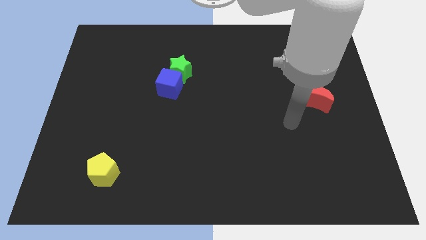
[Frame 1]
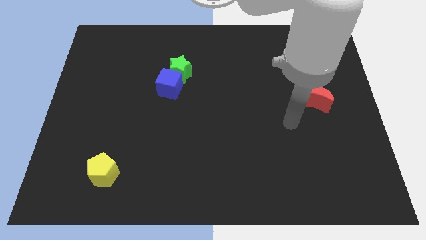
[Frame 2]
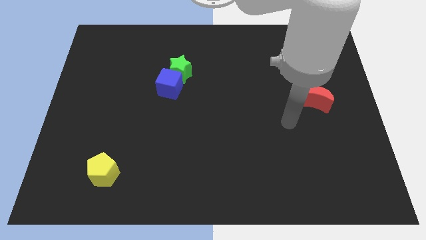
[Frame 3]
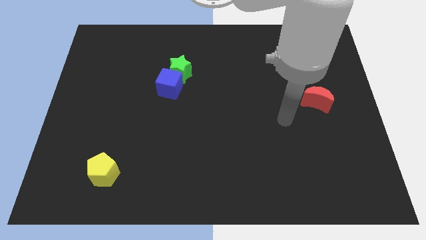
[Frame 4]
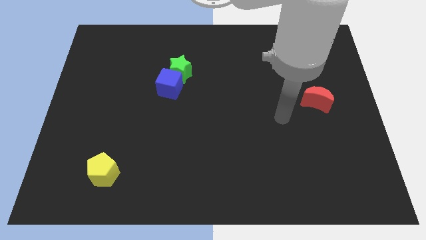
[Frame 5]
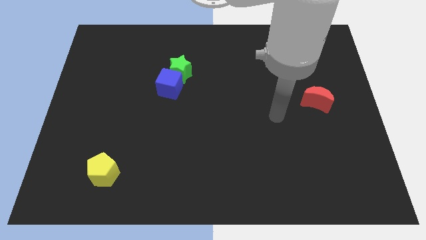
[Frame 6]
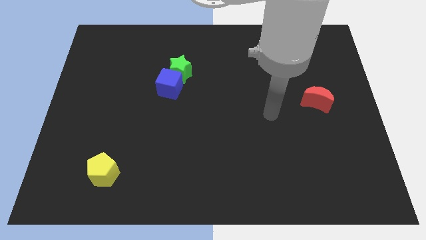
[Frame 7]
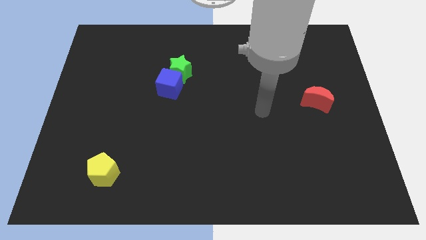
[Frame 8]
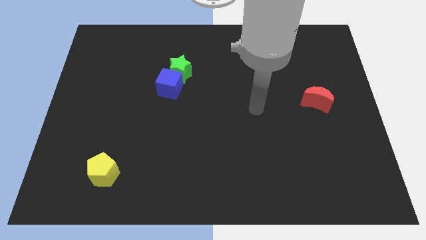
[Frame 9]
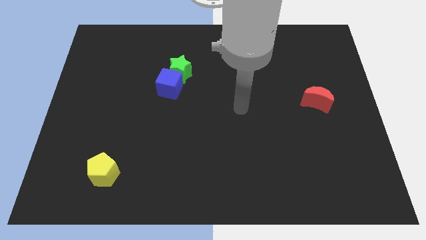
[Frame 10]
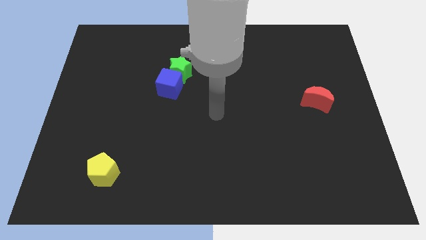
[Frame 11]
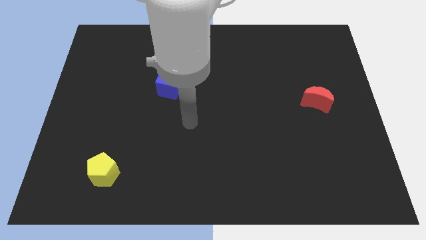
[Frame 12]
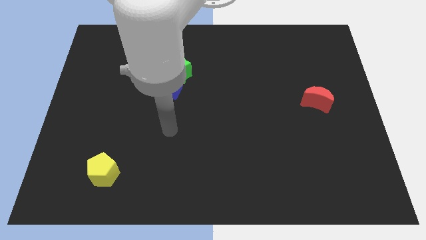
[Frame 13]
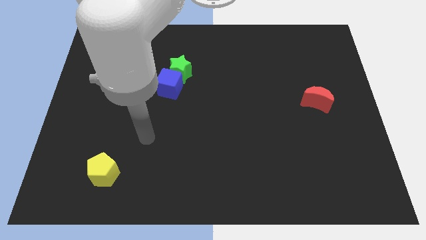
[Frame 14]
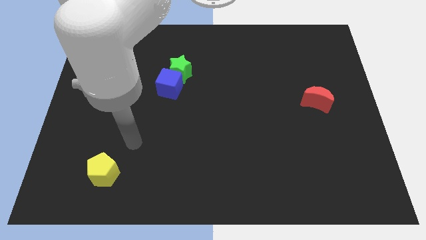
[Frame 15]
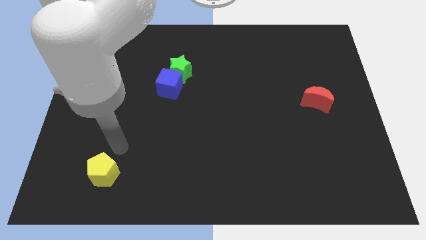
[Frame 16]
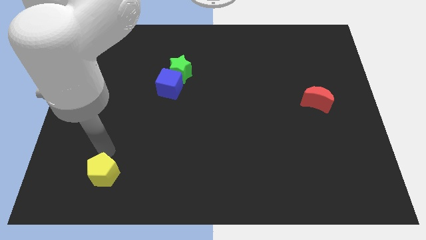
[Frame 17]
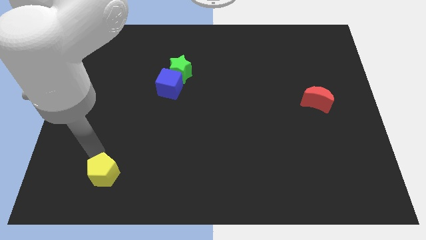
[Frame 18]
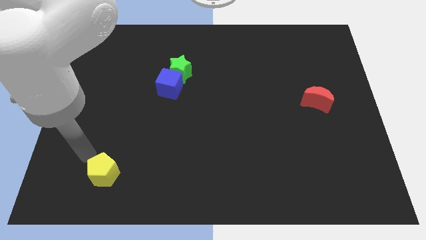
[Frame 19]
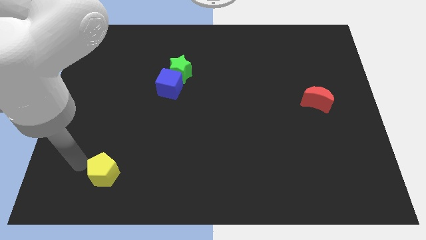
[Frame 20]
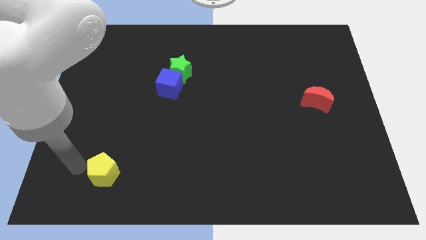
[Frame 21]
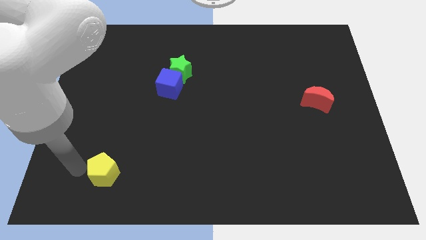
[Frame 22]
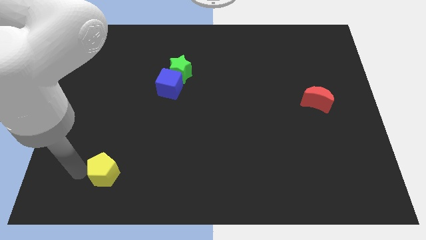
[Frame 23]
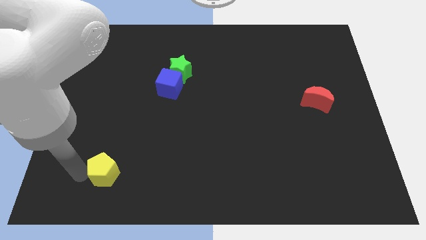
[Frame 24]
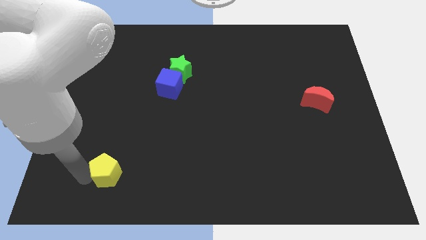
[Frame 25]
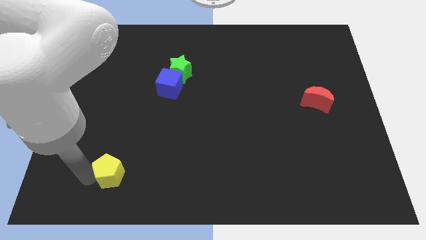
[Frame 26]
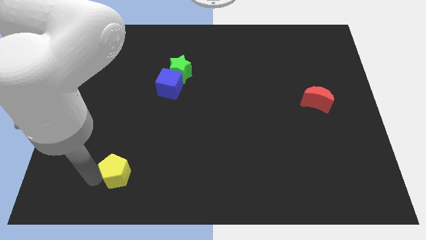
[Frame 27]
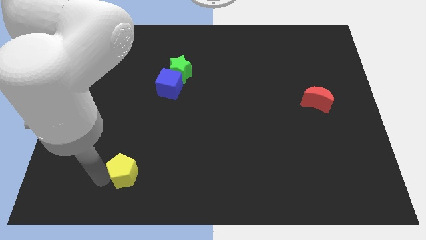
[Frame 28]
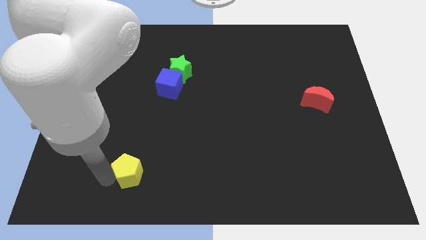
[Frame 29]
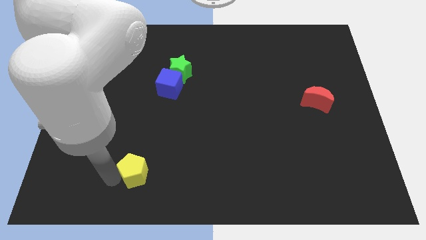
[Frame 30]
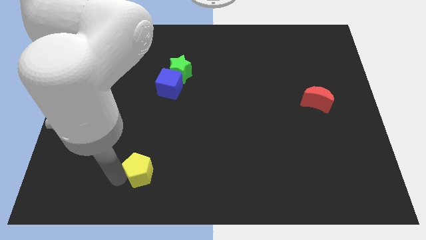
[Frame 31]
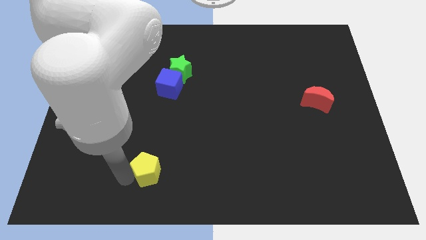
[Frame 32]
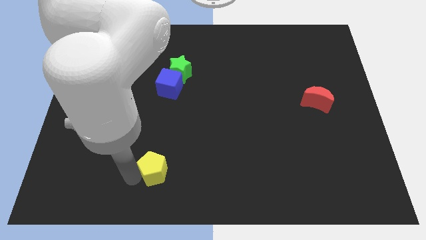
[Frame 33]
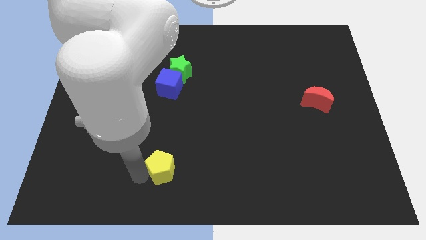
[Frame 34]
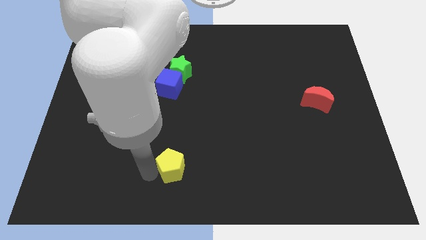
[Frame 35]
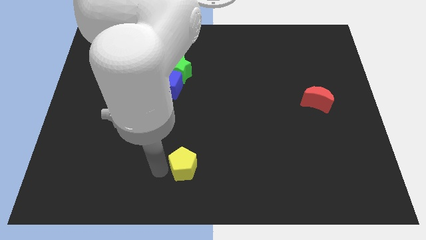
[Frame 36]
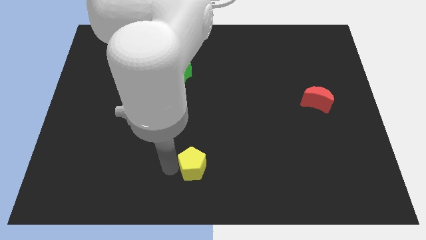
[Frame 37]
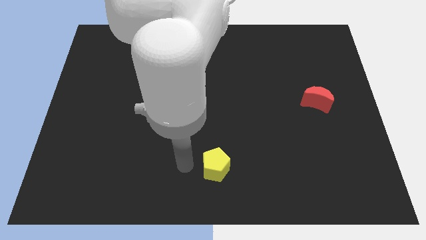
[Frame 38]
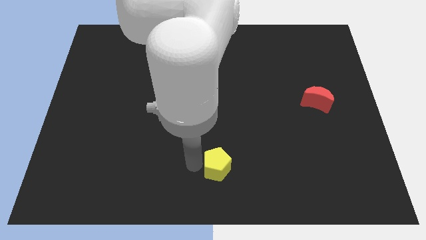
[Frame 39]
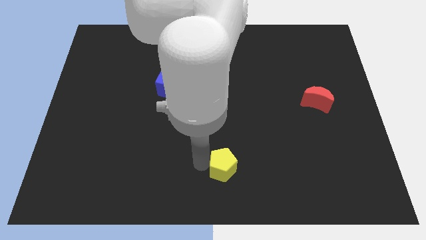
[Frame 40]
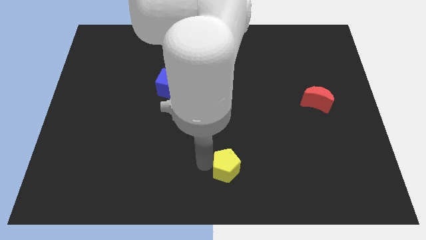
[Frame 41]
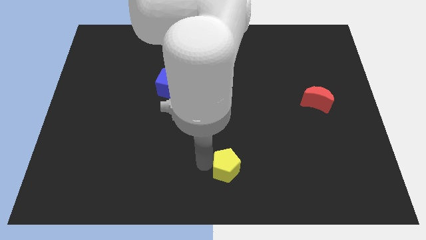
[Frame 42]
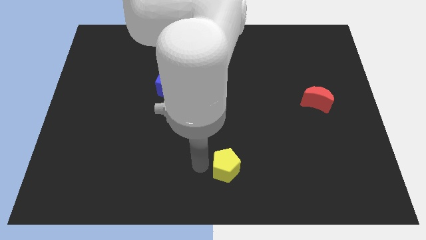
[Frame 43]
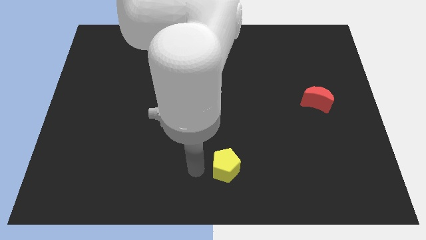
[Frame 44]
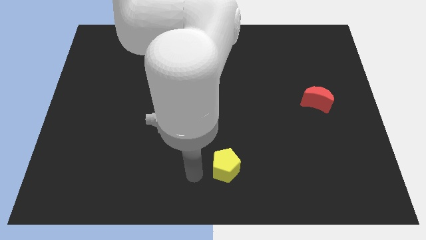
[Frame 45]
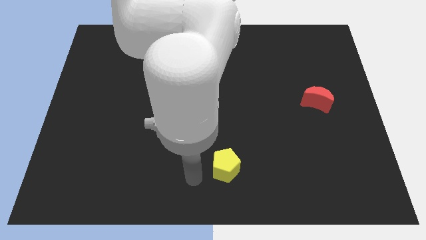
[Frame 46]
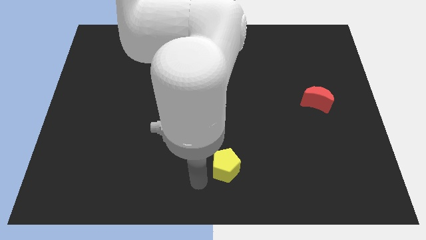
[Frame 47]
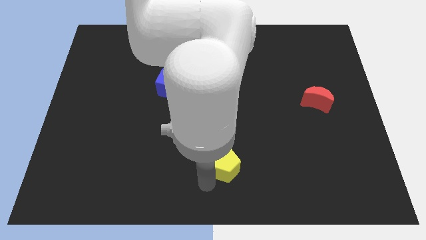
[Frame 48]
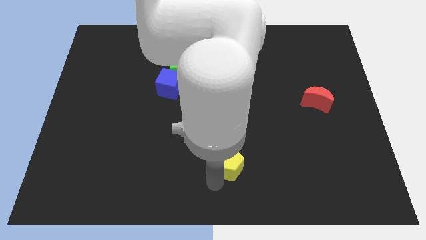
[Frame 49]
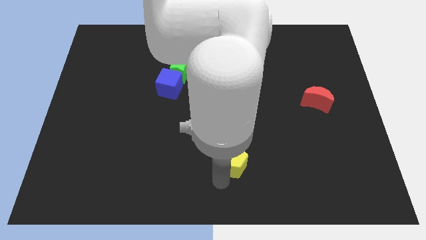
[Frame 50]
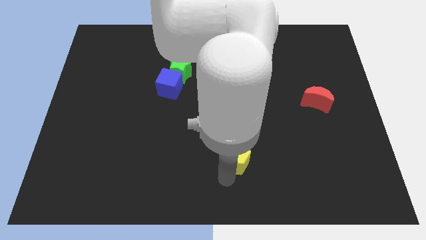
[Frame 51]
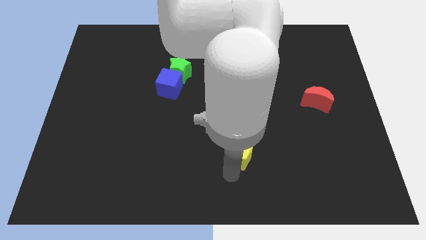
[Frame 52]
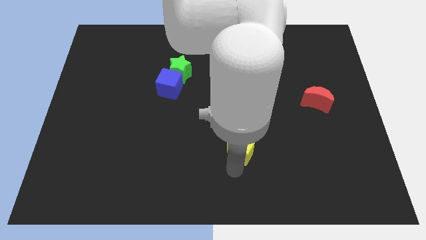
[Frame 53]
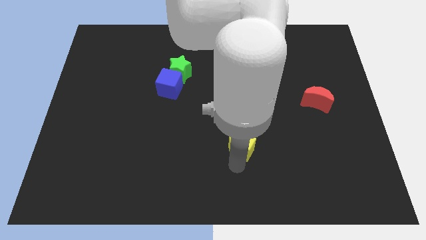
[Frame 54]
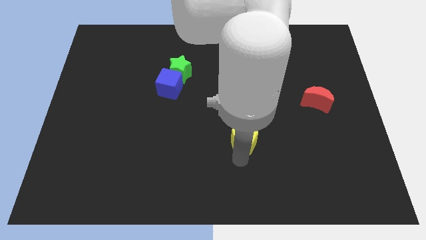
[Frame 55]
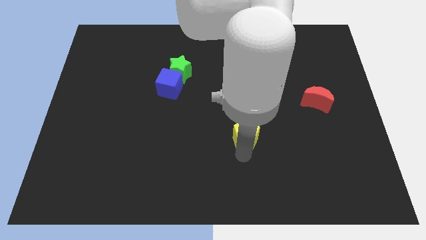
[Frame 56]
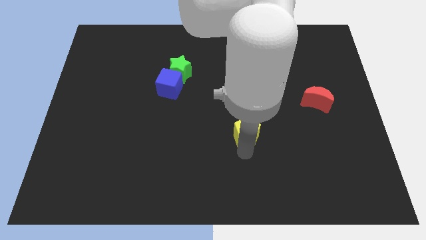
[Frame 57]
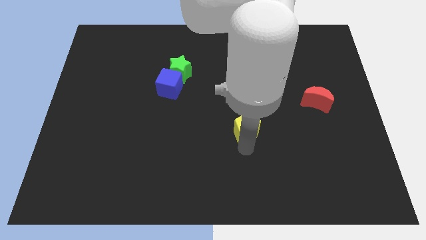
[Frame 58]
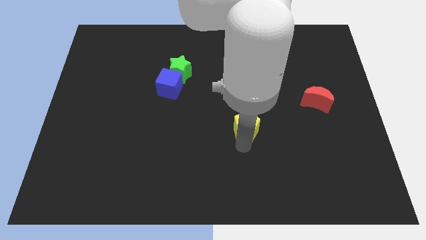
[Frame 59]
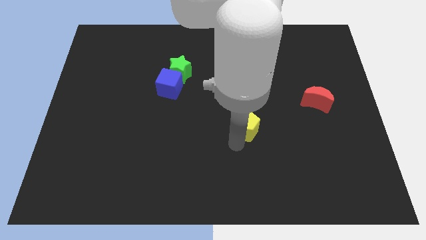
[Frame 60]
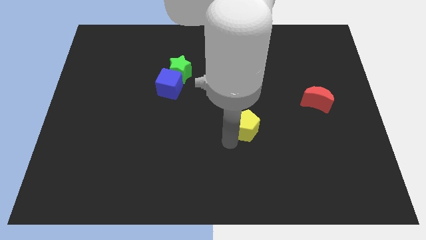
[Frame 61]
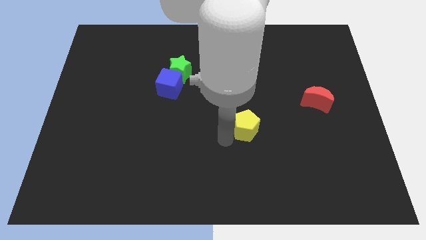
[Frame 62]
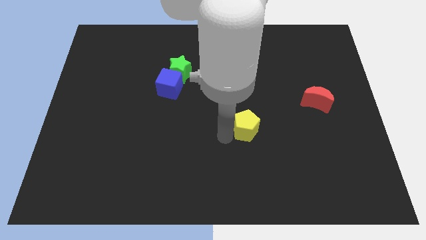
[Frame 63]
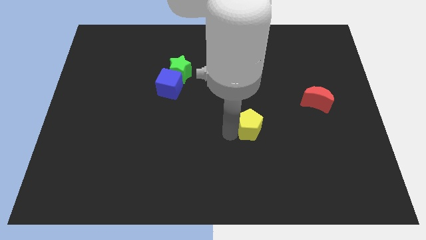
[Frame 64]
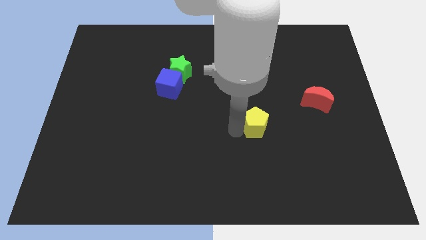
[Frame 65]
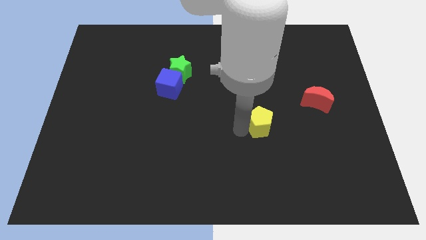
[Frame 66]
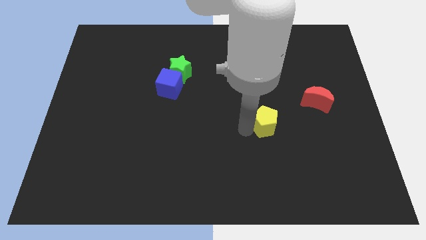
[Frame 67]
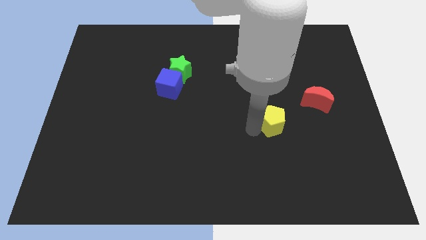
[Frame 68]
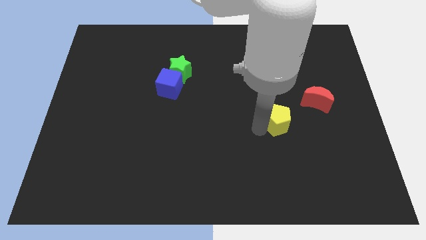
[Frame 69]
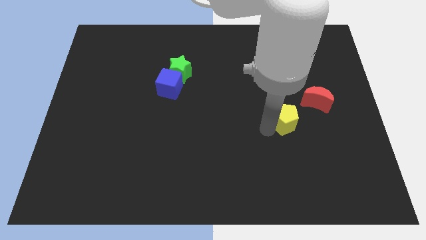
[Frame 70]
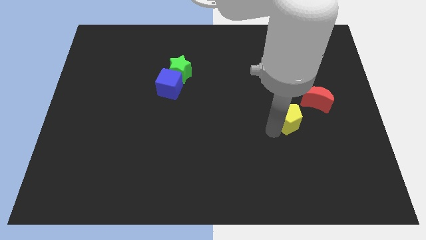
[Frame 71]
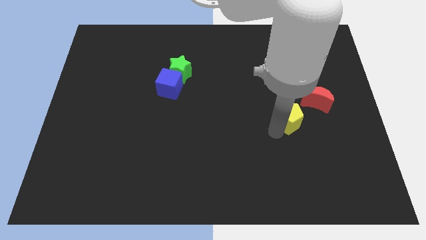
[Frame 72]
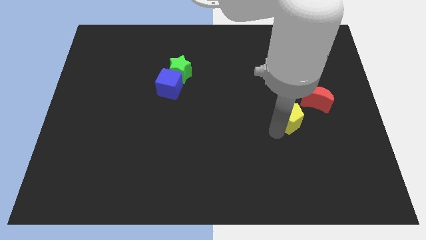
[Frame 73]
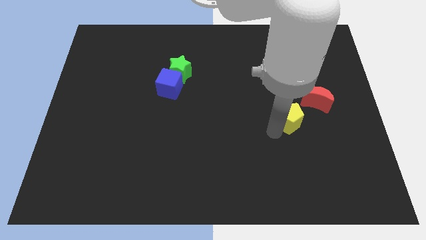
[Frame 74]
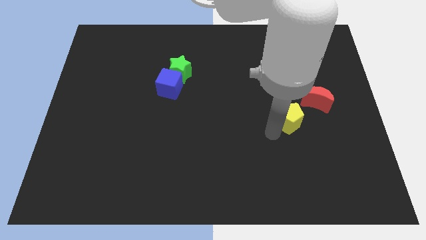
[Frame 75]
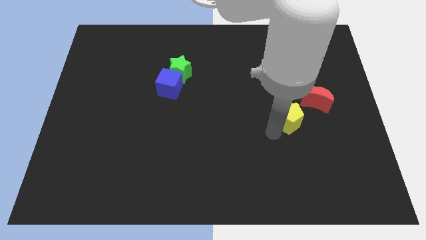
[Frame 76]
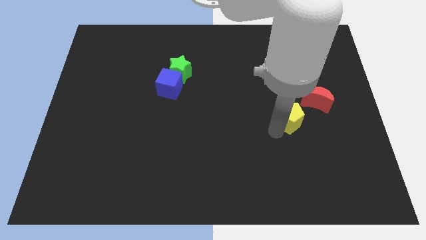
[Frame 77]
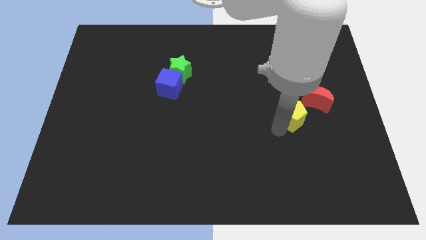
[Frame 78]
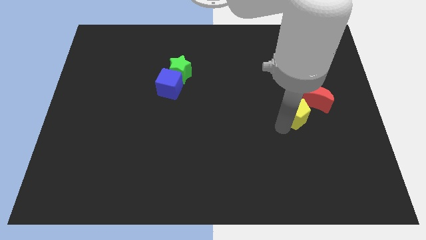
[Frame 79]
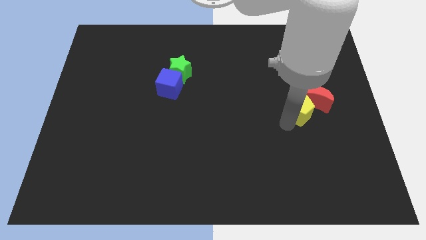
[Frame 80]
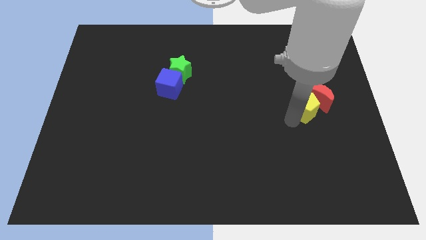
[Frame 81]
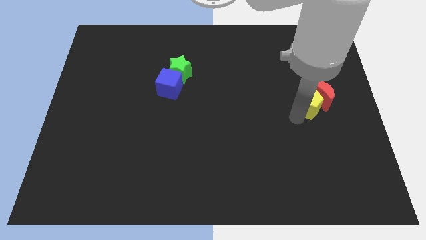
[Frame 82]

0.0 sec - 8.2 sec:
push the pentagon next to the red moon
